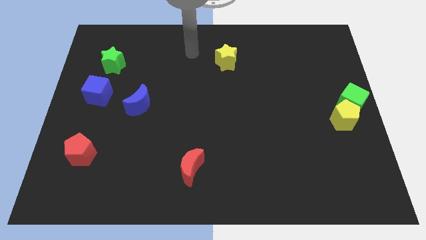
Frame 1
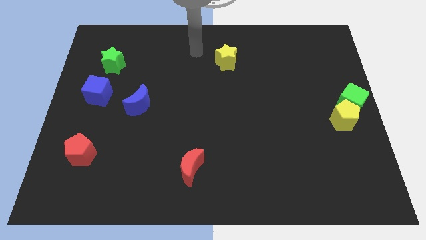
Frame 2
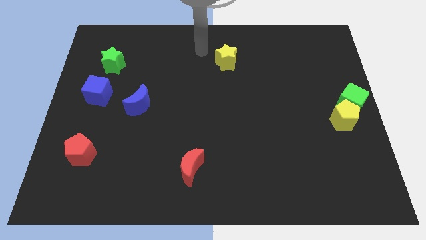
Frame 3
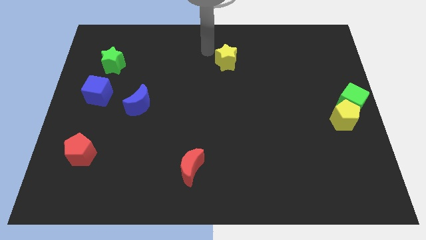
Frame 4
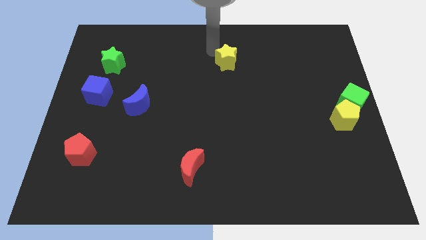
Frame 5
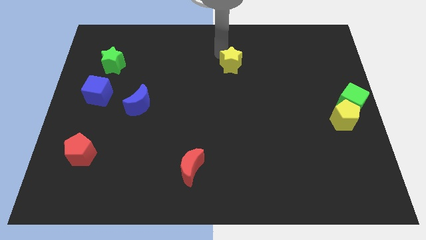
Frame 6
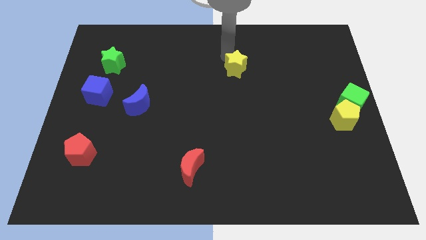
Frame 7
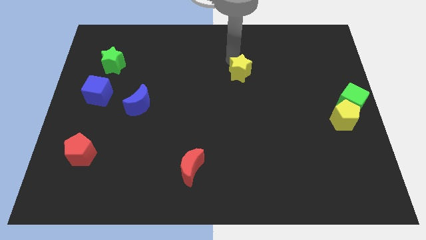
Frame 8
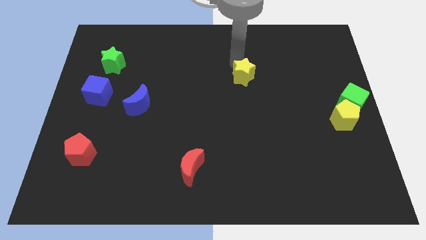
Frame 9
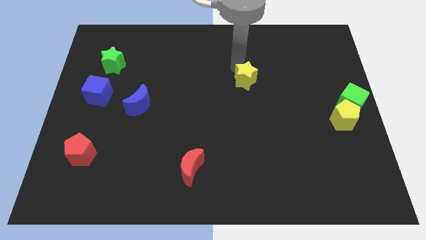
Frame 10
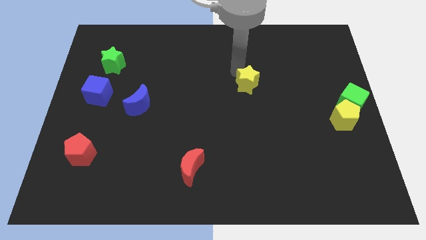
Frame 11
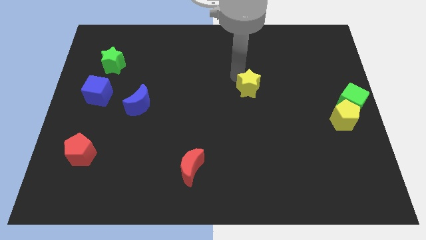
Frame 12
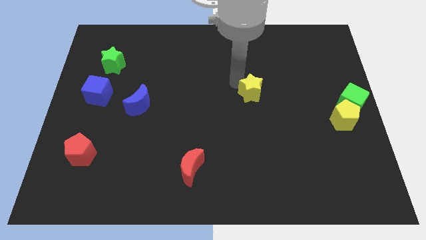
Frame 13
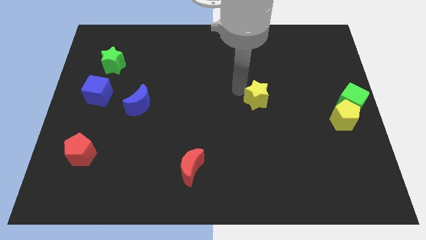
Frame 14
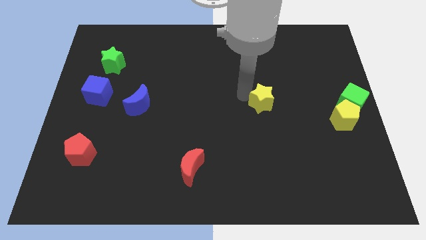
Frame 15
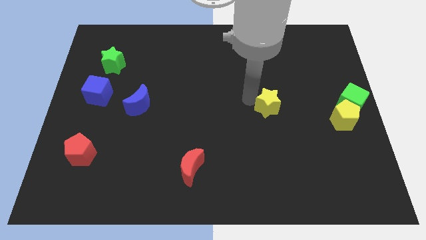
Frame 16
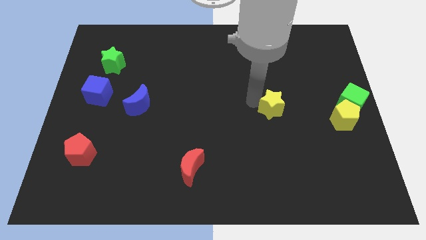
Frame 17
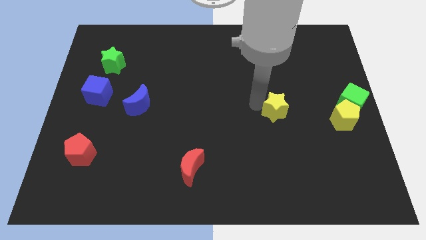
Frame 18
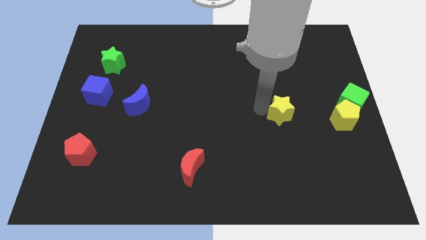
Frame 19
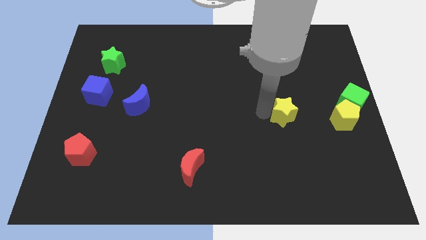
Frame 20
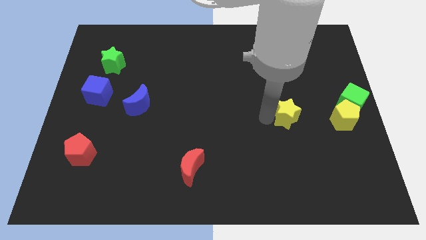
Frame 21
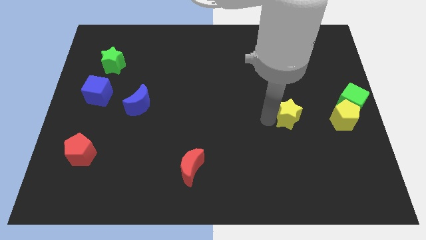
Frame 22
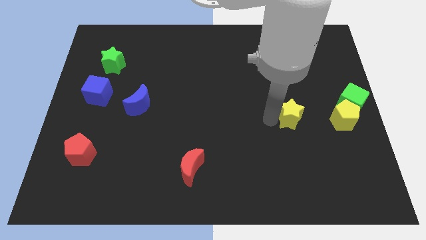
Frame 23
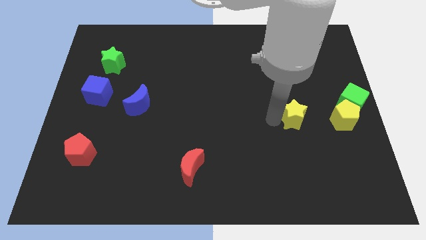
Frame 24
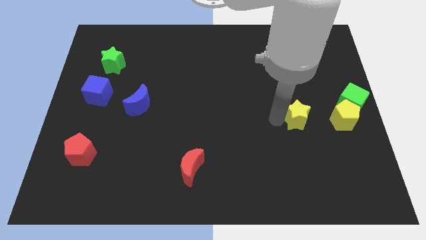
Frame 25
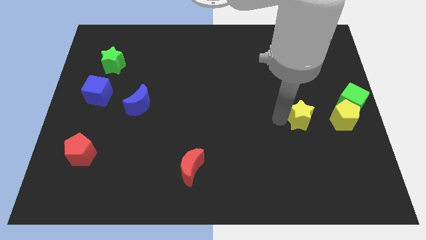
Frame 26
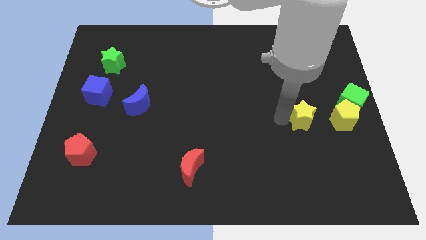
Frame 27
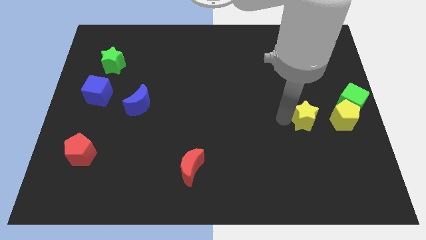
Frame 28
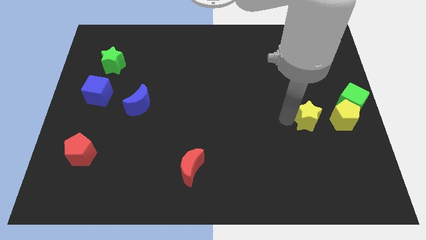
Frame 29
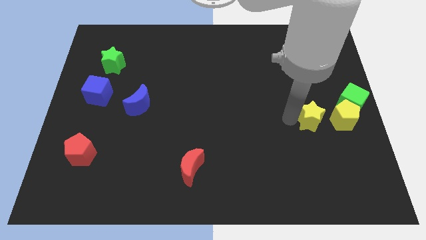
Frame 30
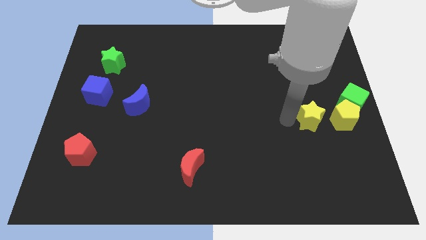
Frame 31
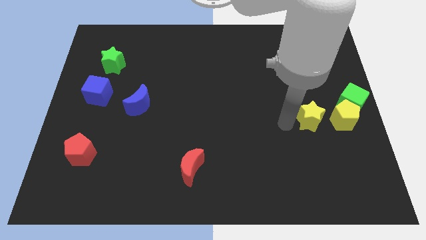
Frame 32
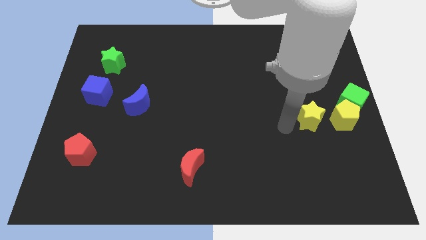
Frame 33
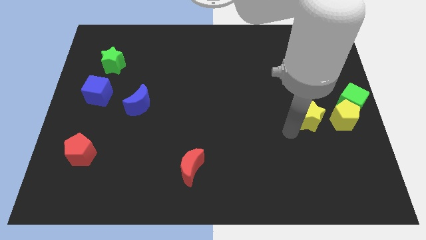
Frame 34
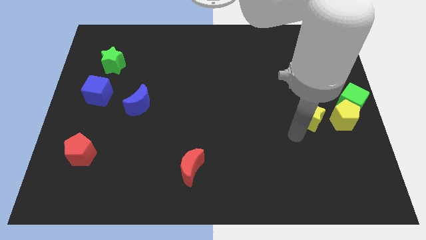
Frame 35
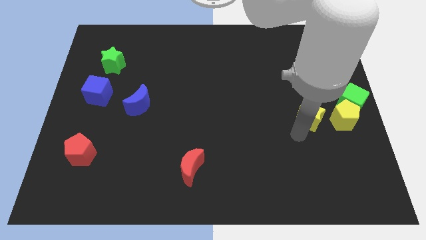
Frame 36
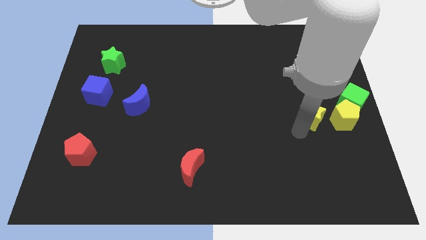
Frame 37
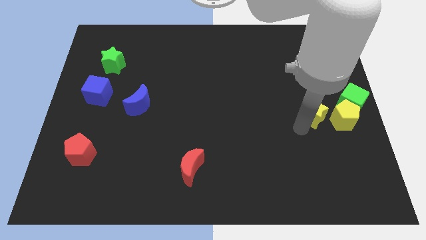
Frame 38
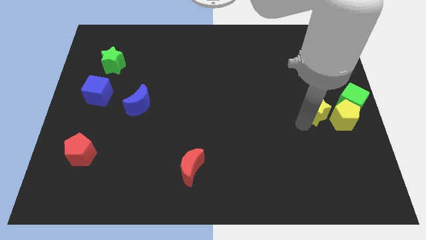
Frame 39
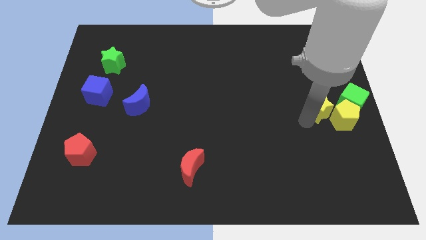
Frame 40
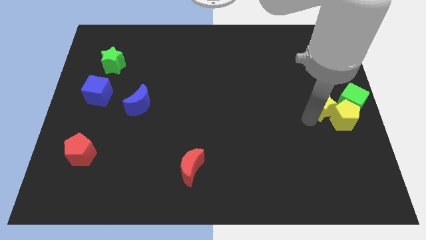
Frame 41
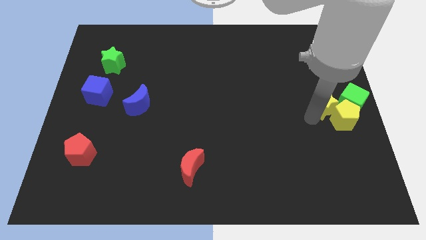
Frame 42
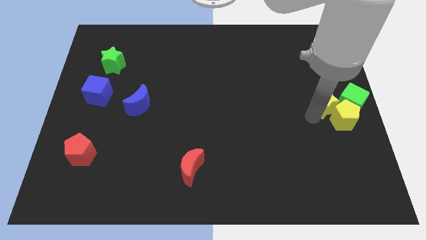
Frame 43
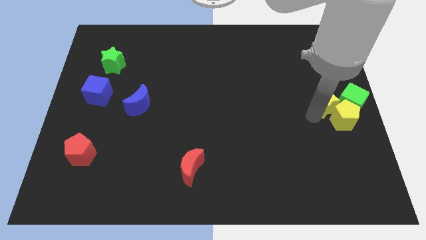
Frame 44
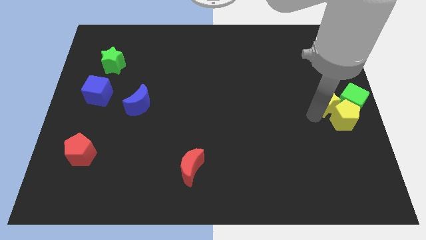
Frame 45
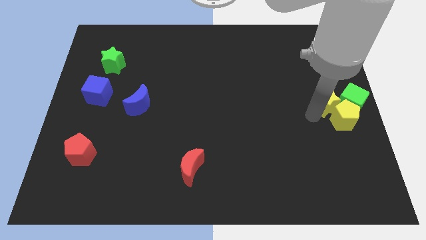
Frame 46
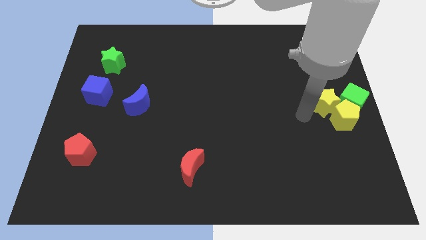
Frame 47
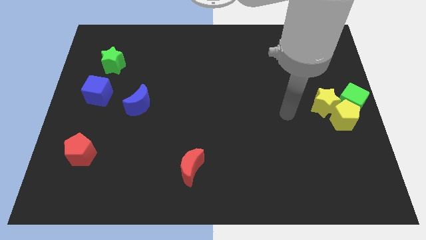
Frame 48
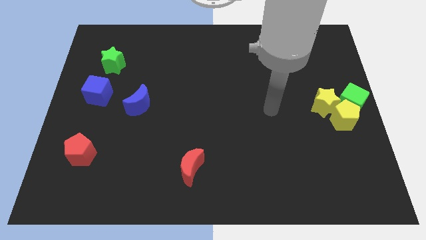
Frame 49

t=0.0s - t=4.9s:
push the yellow star into the yellow pentagon

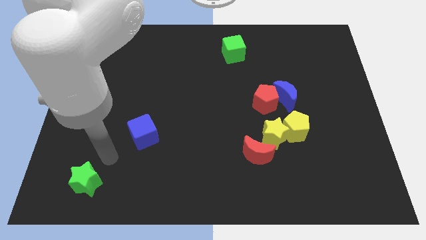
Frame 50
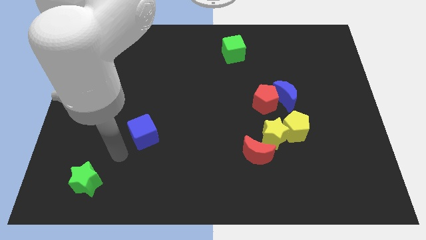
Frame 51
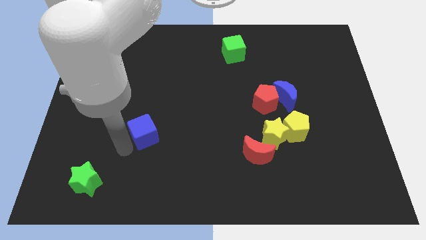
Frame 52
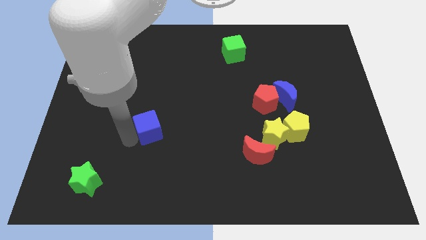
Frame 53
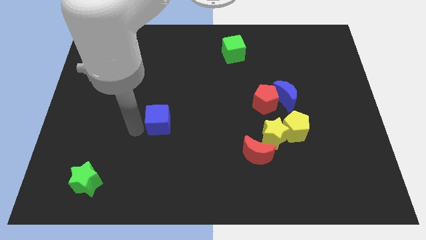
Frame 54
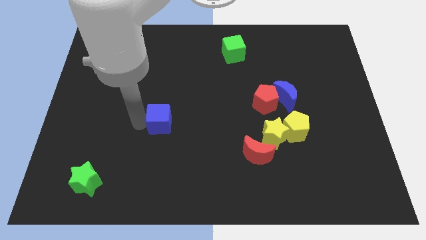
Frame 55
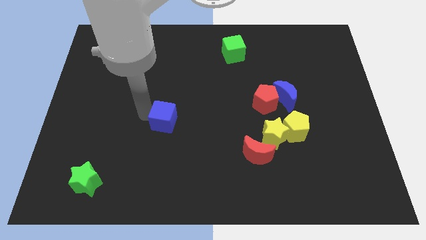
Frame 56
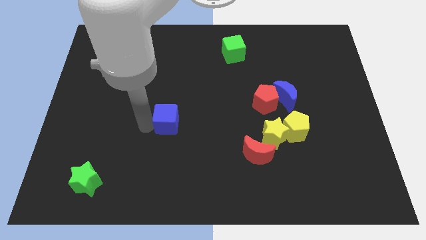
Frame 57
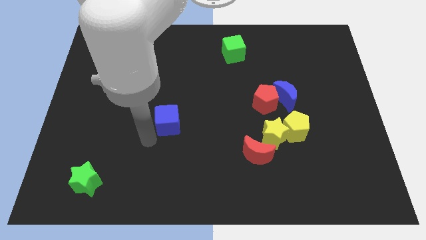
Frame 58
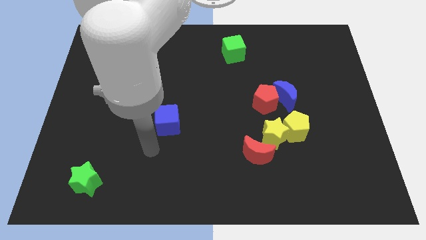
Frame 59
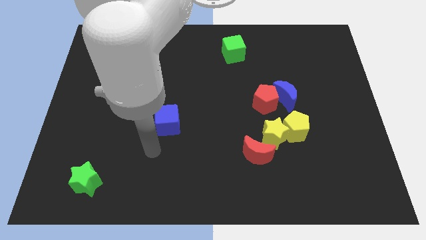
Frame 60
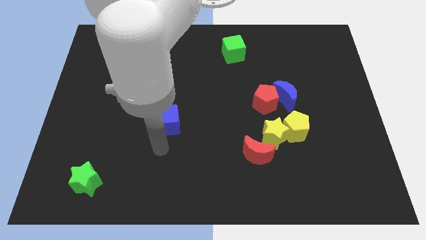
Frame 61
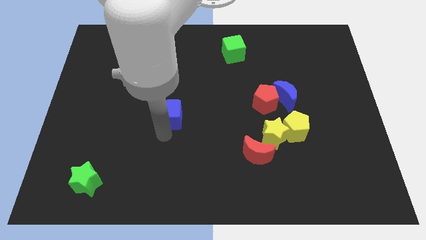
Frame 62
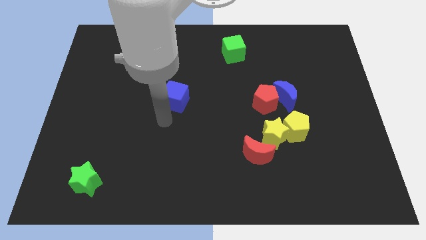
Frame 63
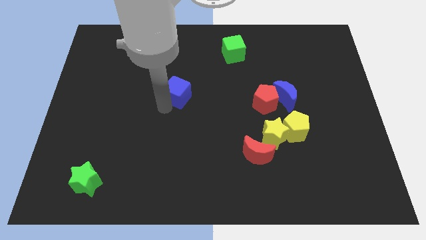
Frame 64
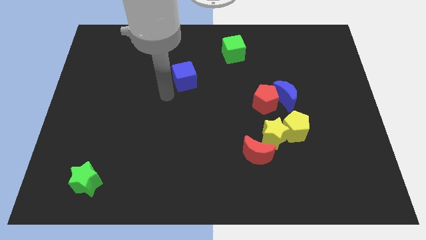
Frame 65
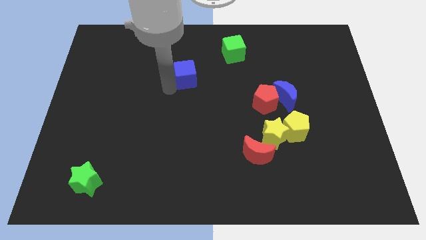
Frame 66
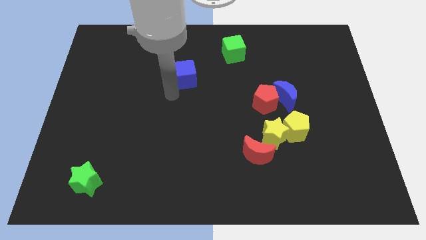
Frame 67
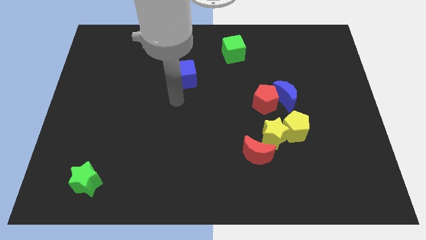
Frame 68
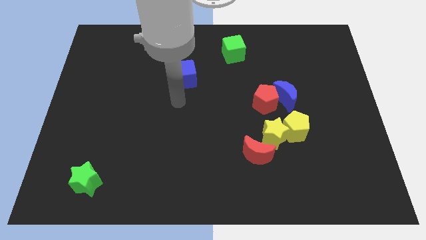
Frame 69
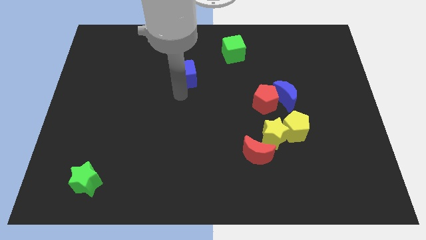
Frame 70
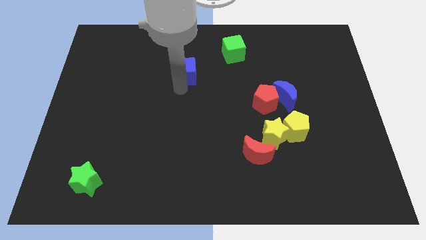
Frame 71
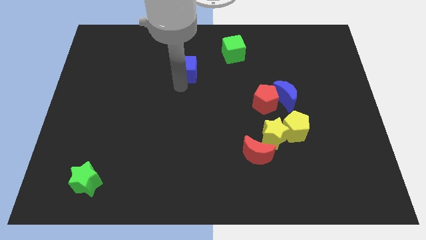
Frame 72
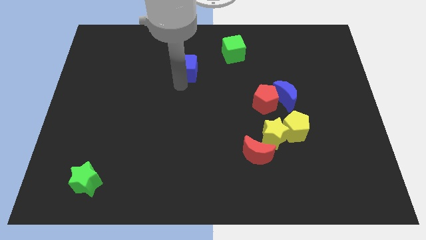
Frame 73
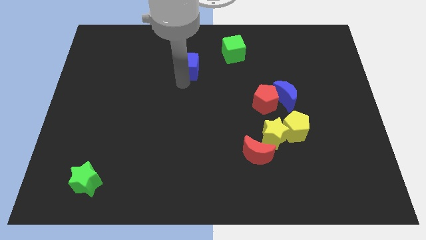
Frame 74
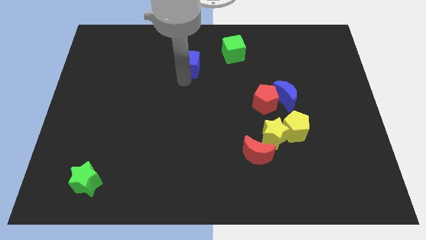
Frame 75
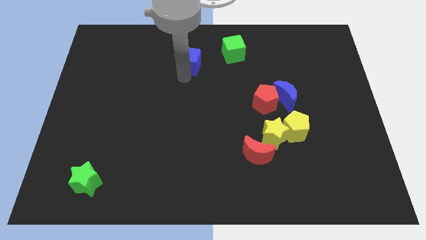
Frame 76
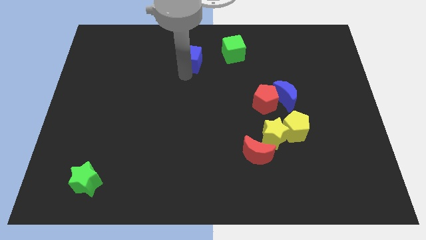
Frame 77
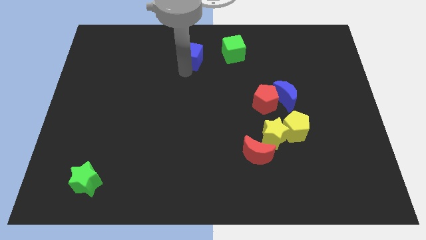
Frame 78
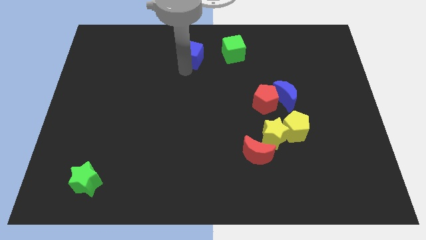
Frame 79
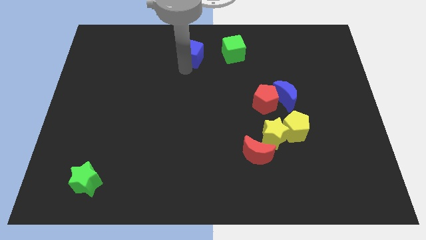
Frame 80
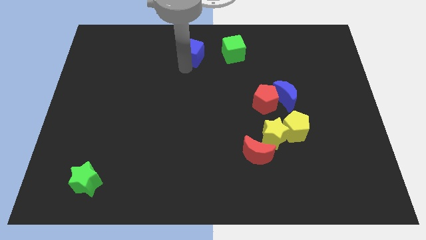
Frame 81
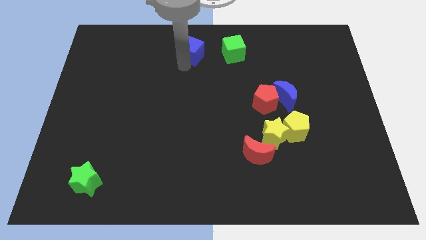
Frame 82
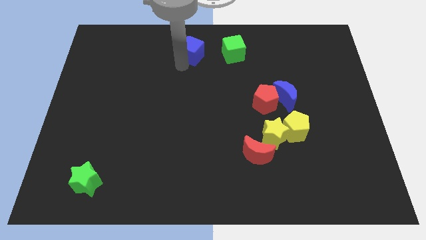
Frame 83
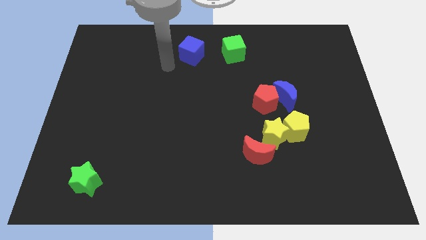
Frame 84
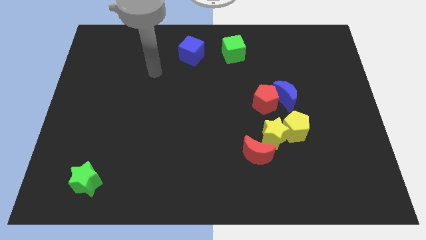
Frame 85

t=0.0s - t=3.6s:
place the blue cube to the left of the green cube

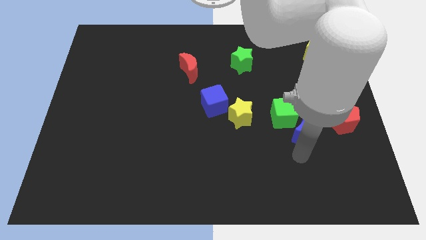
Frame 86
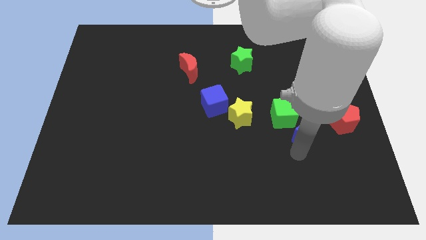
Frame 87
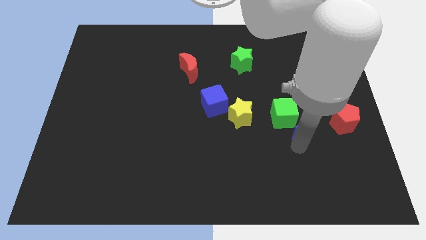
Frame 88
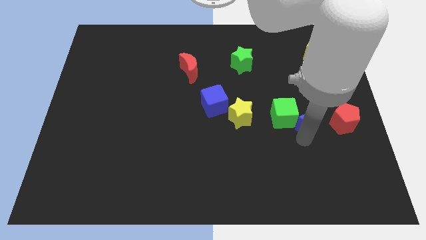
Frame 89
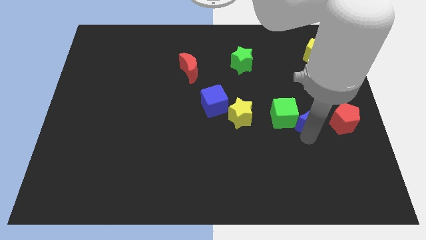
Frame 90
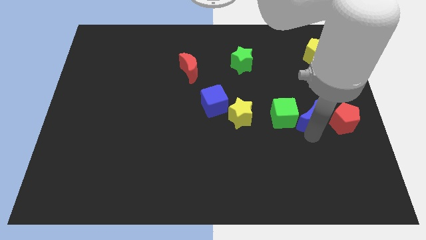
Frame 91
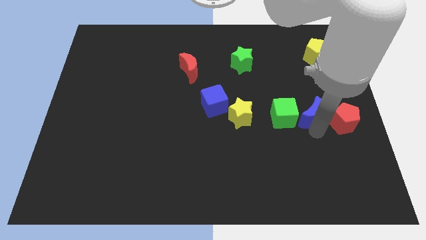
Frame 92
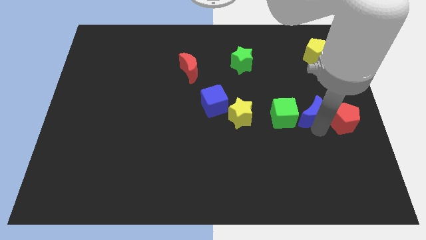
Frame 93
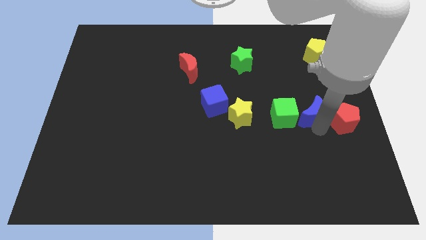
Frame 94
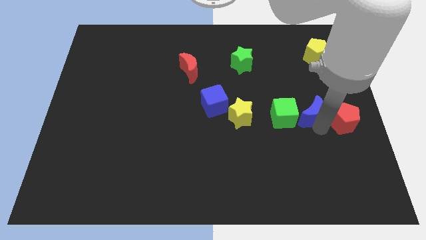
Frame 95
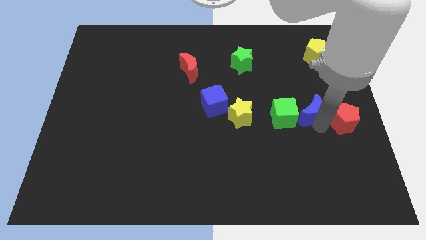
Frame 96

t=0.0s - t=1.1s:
move the blue crescent to the right of the green cube
